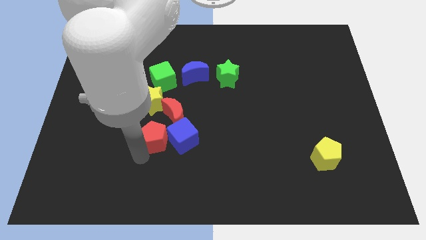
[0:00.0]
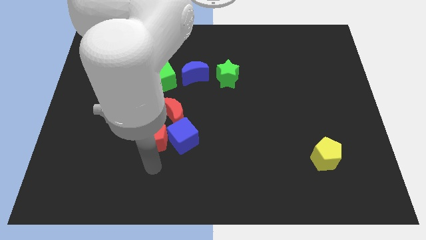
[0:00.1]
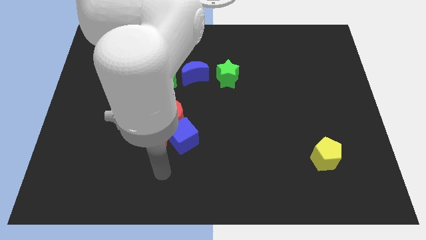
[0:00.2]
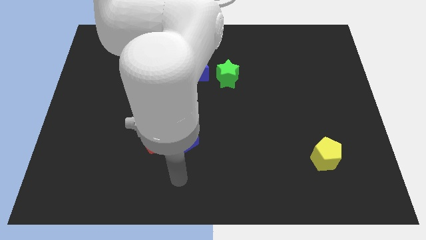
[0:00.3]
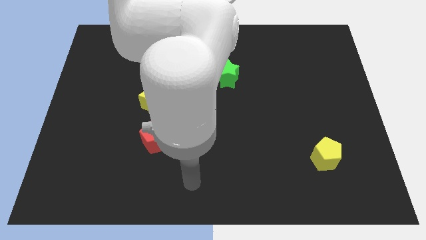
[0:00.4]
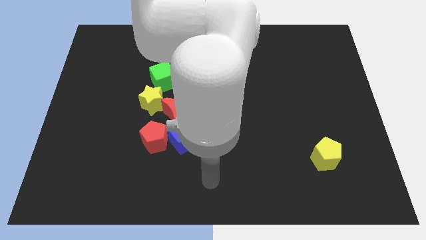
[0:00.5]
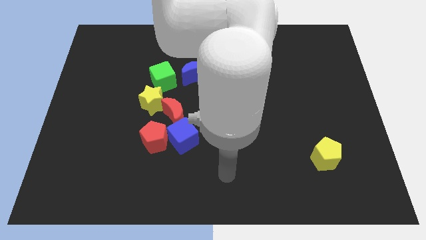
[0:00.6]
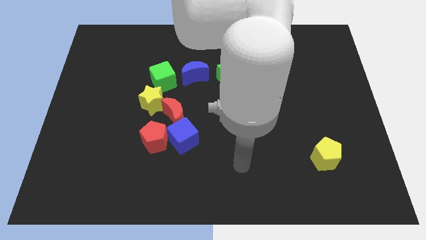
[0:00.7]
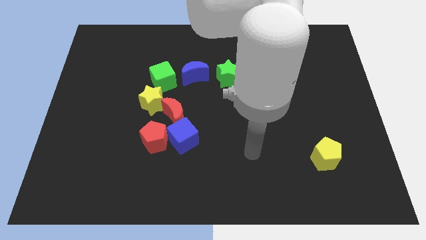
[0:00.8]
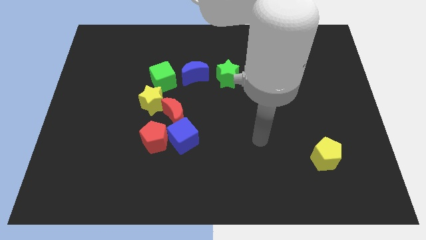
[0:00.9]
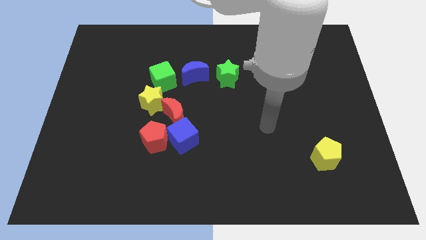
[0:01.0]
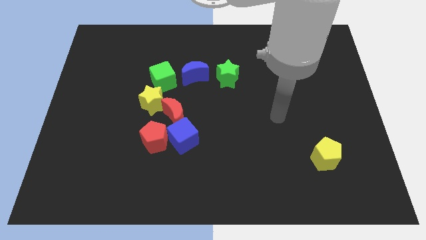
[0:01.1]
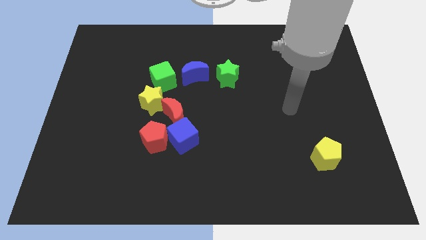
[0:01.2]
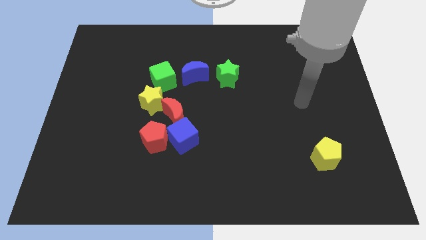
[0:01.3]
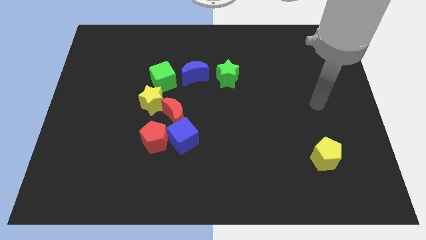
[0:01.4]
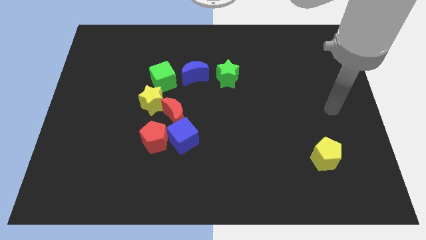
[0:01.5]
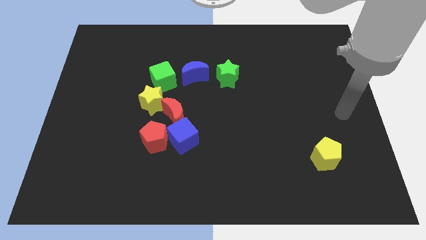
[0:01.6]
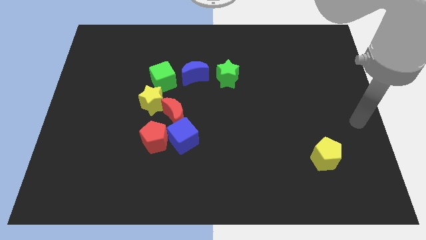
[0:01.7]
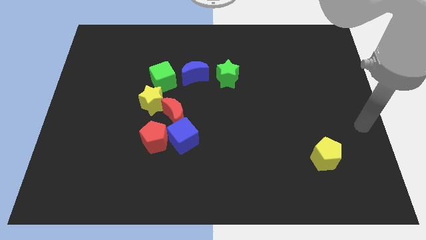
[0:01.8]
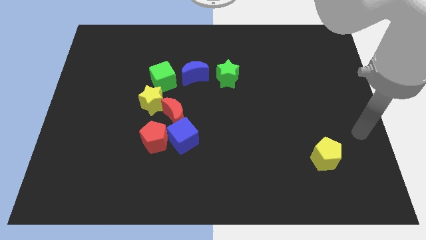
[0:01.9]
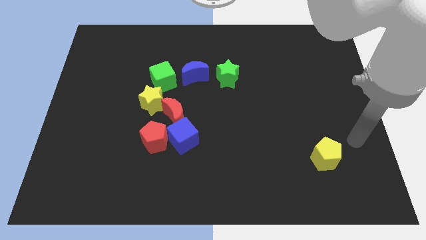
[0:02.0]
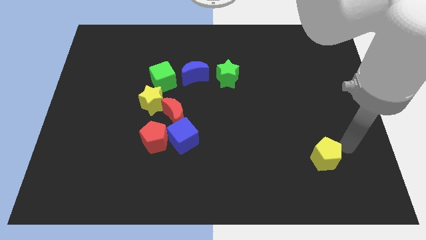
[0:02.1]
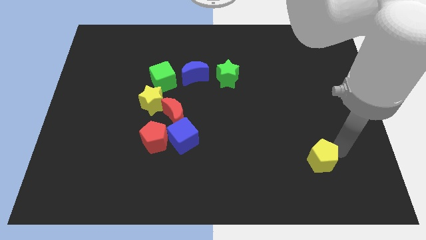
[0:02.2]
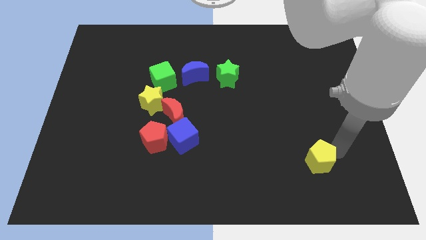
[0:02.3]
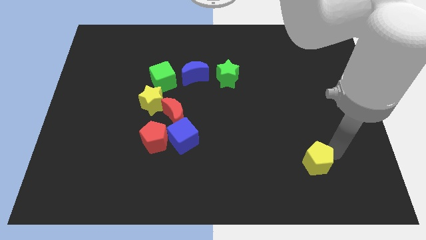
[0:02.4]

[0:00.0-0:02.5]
slightly move the yellow pentagon to the left side of the board

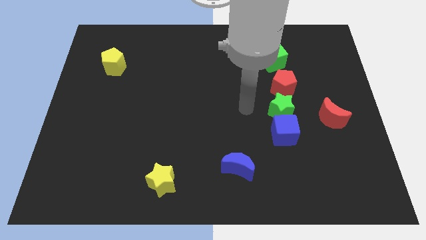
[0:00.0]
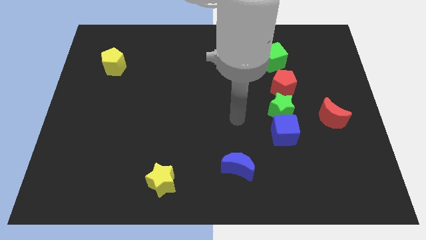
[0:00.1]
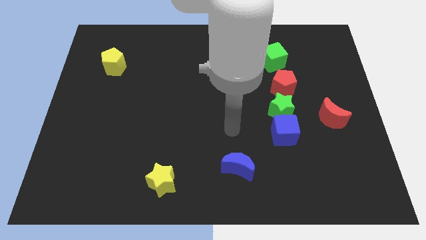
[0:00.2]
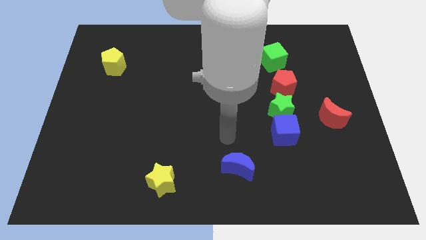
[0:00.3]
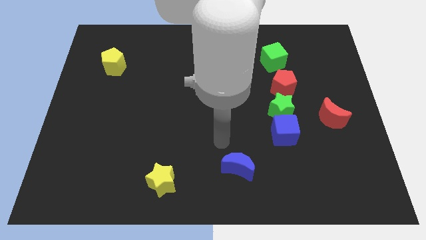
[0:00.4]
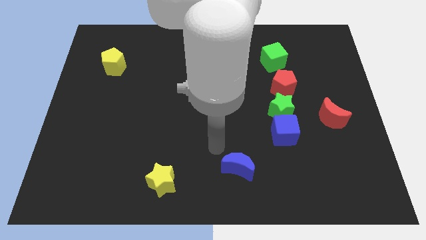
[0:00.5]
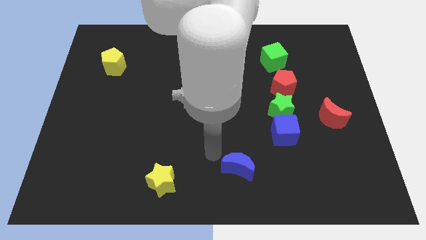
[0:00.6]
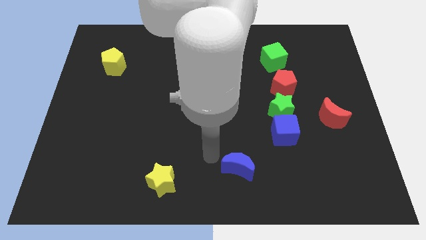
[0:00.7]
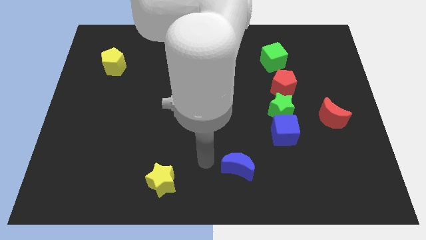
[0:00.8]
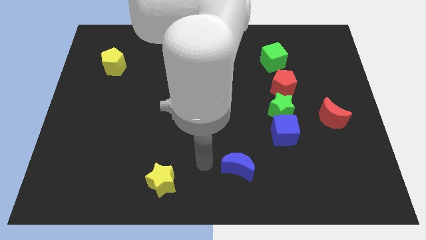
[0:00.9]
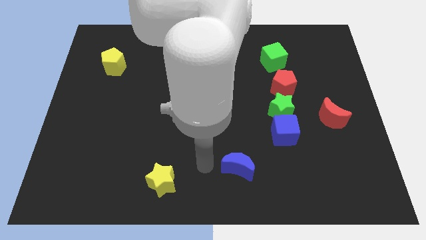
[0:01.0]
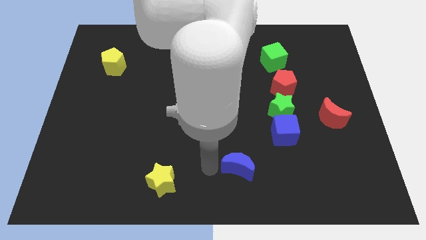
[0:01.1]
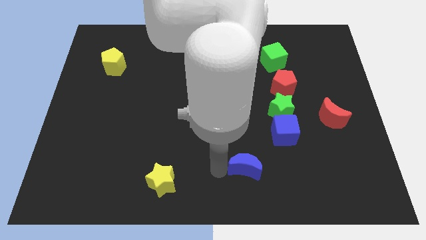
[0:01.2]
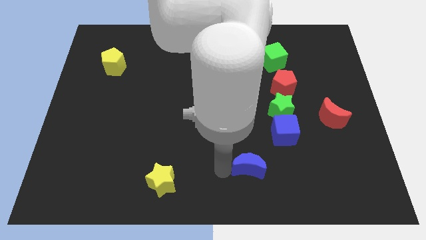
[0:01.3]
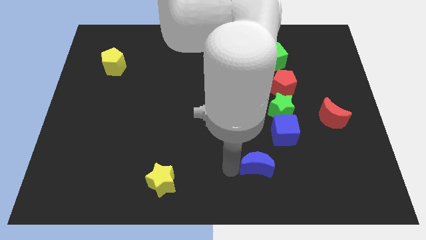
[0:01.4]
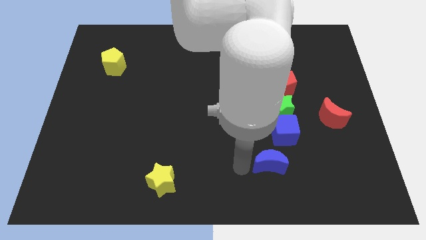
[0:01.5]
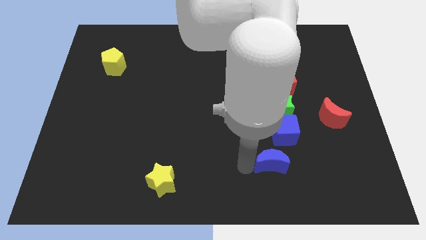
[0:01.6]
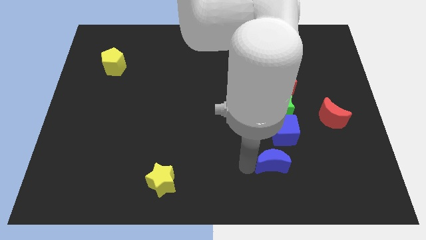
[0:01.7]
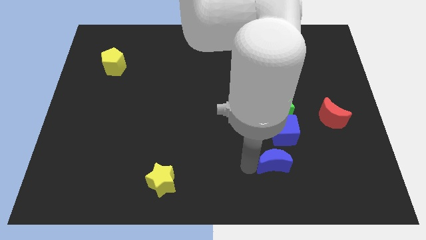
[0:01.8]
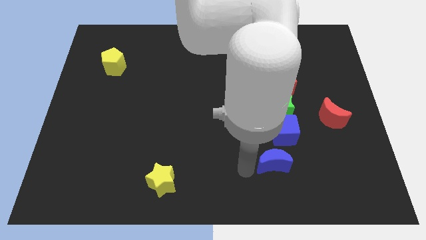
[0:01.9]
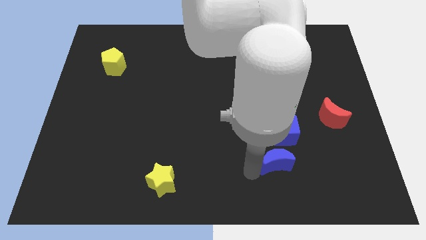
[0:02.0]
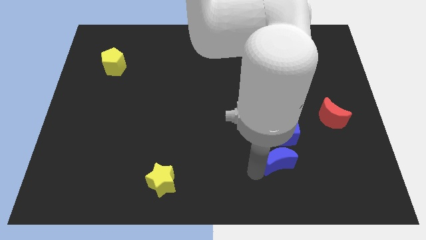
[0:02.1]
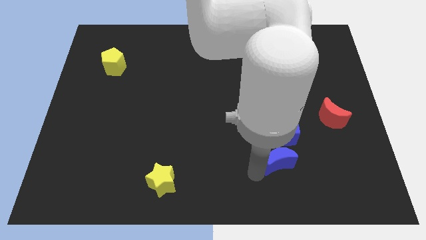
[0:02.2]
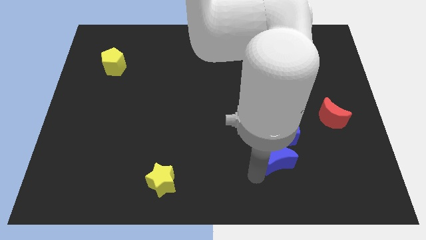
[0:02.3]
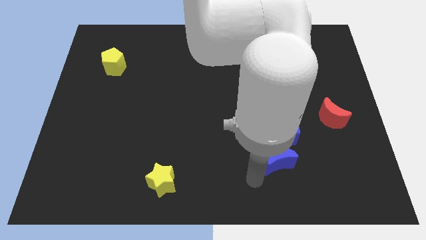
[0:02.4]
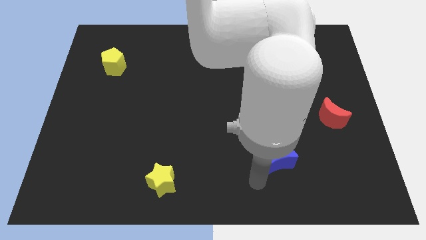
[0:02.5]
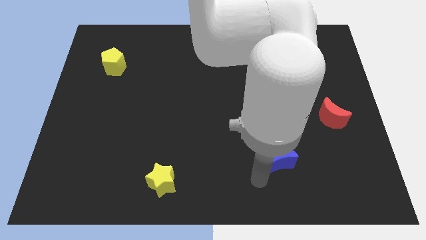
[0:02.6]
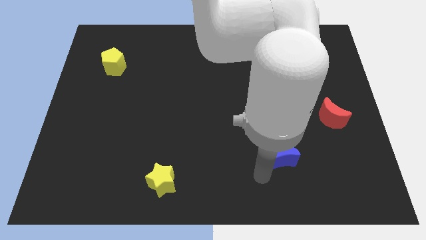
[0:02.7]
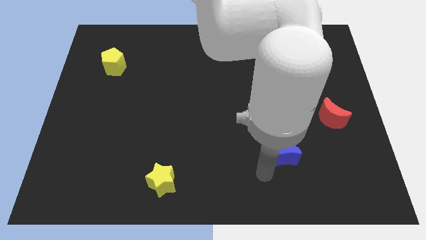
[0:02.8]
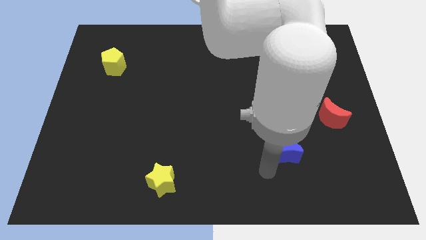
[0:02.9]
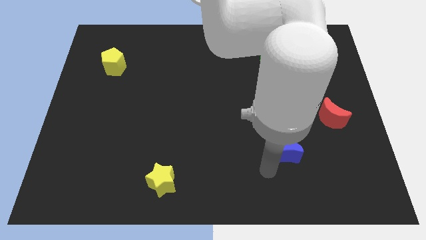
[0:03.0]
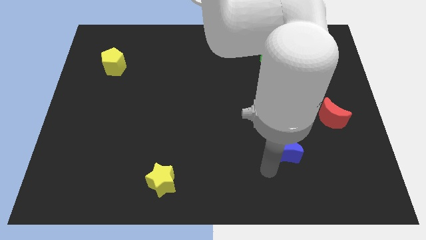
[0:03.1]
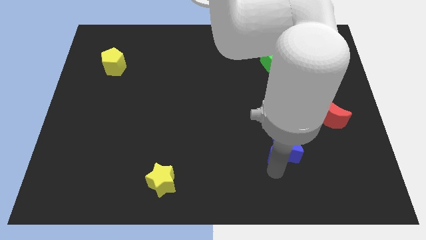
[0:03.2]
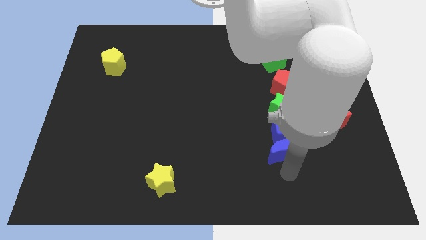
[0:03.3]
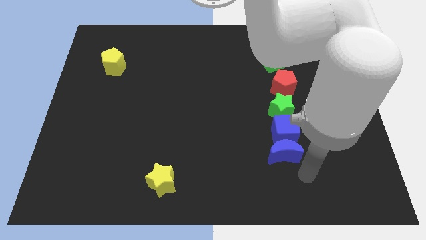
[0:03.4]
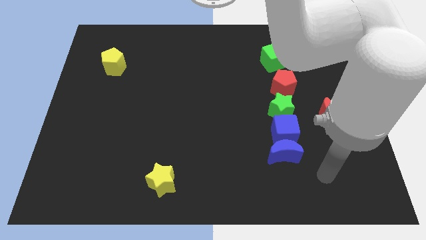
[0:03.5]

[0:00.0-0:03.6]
push the blue crescent at the bottom side of the blue cube

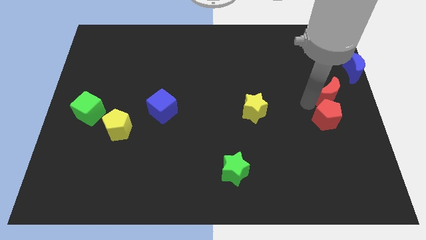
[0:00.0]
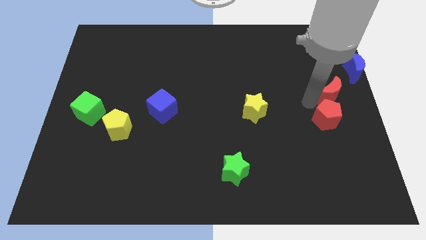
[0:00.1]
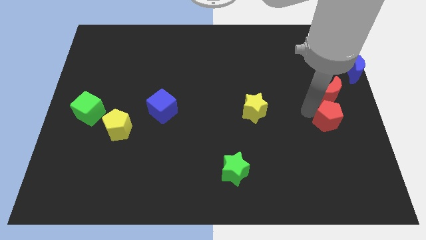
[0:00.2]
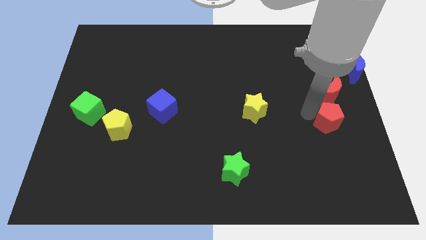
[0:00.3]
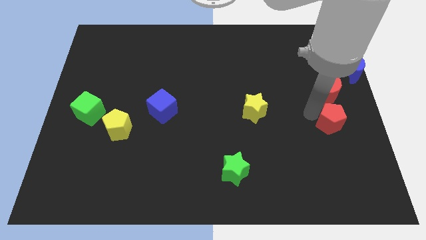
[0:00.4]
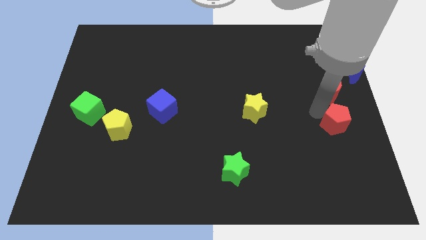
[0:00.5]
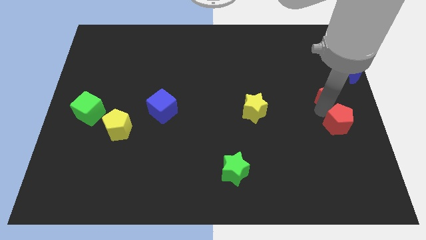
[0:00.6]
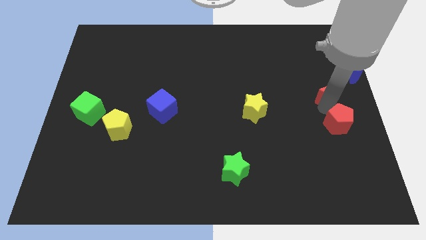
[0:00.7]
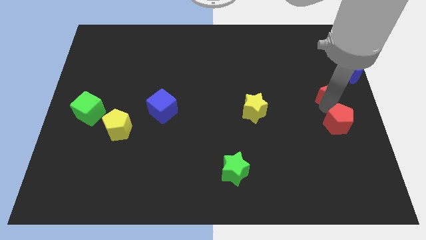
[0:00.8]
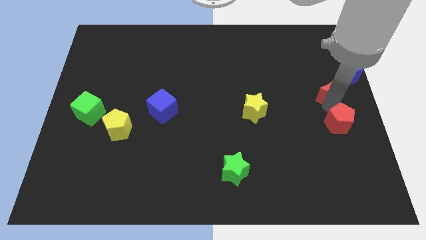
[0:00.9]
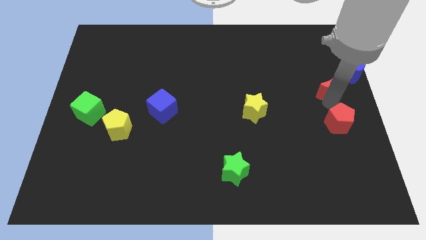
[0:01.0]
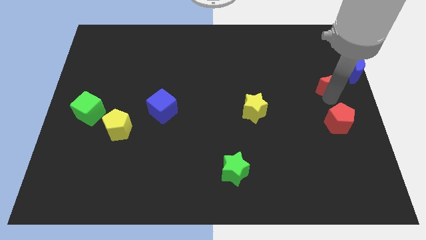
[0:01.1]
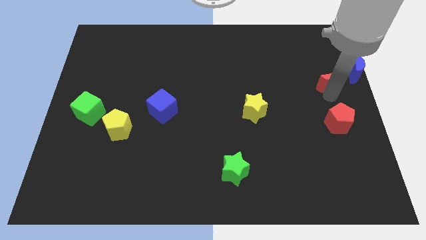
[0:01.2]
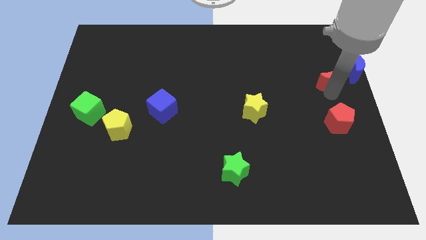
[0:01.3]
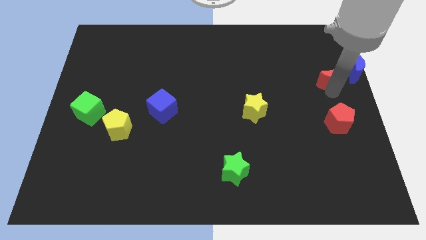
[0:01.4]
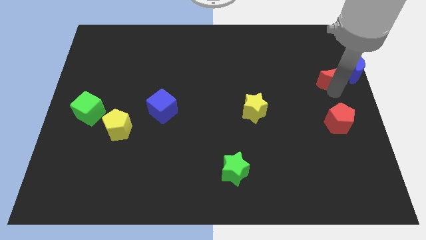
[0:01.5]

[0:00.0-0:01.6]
move red crescent upwards

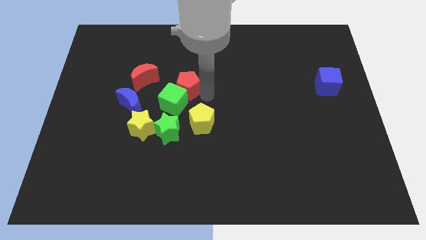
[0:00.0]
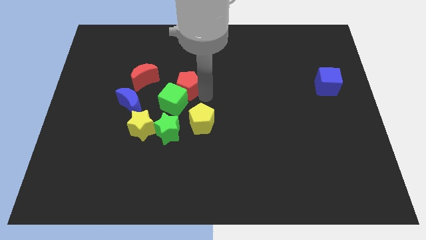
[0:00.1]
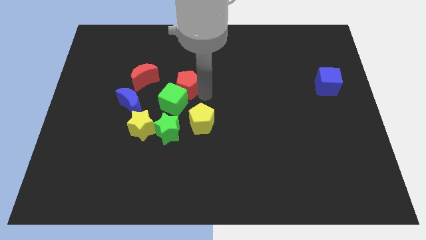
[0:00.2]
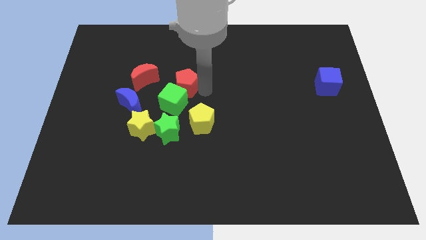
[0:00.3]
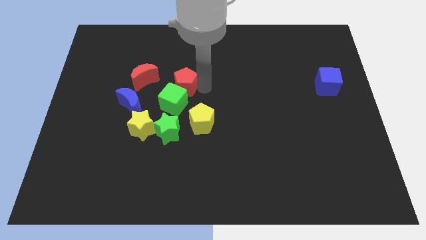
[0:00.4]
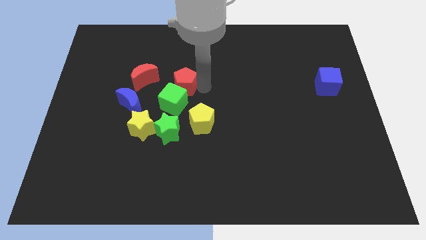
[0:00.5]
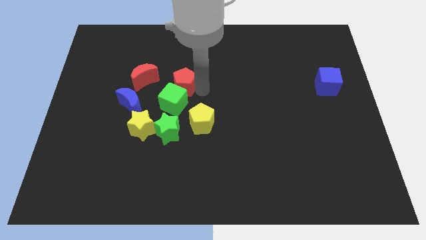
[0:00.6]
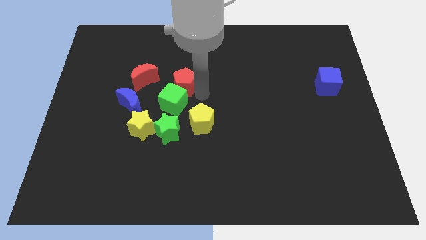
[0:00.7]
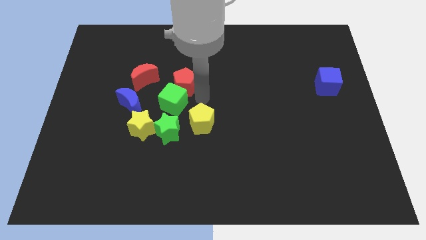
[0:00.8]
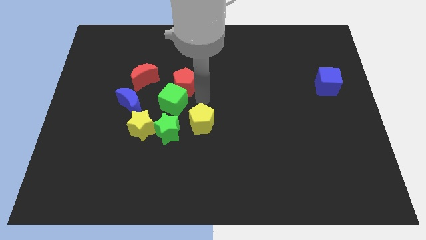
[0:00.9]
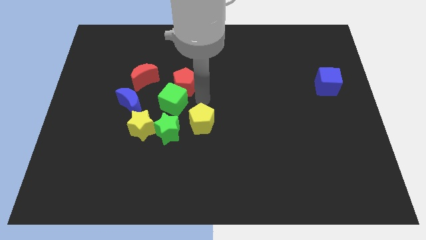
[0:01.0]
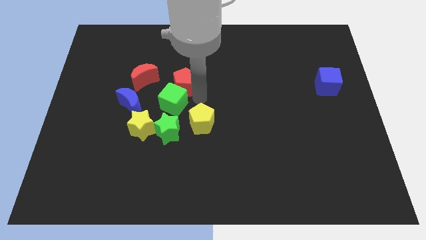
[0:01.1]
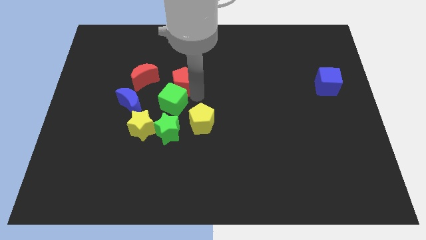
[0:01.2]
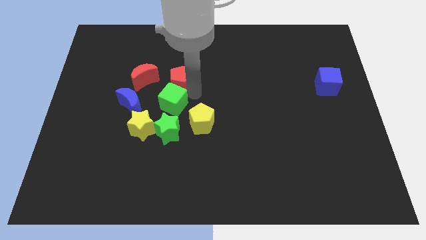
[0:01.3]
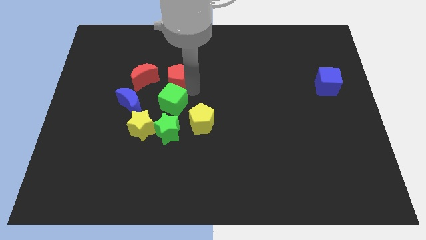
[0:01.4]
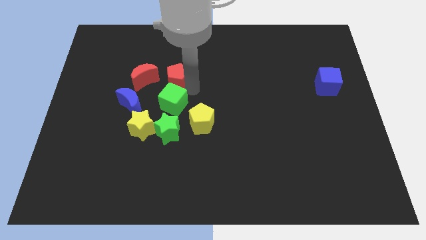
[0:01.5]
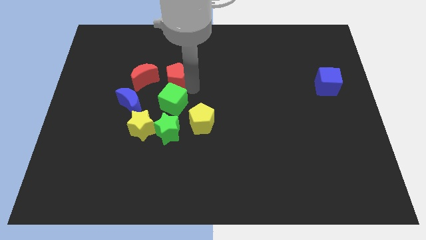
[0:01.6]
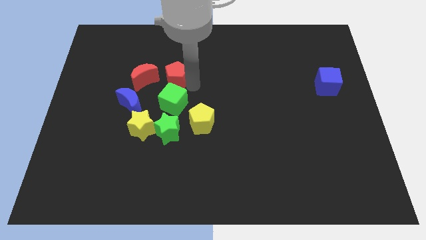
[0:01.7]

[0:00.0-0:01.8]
push the red pentagon parallel to red moon
